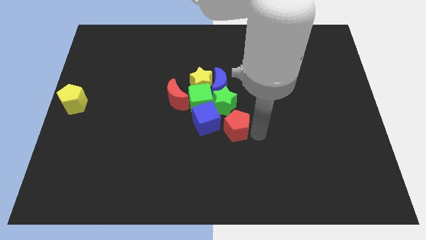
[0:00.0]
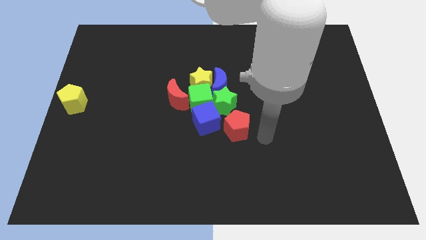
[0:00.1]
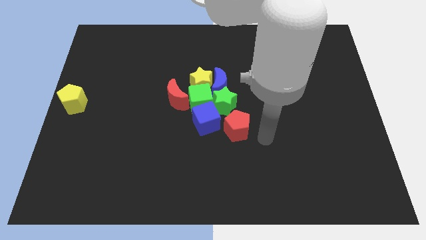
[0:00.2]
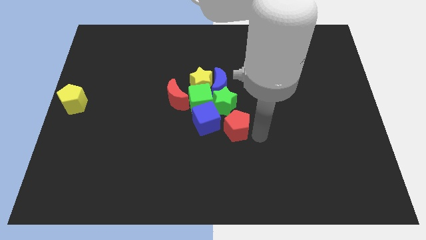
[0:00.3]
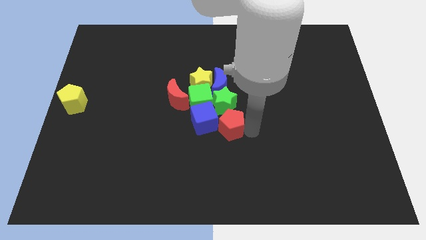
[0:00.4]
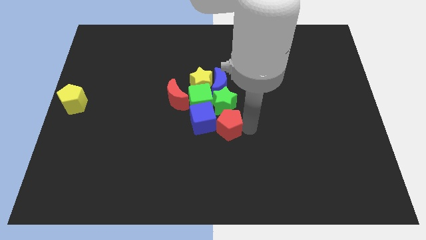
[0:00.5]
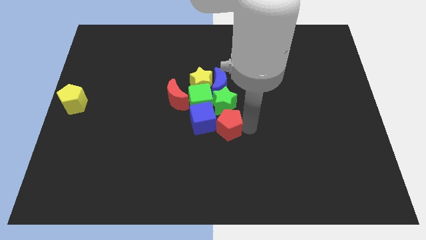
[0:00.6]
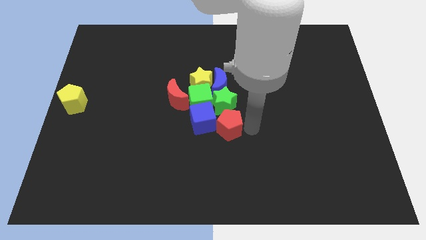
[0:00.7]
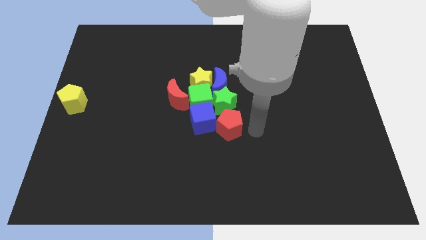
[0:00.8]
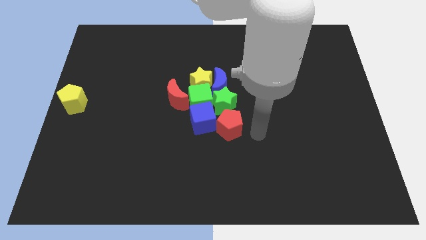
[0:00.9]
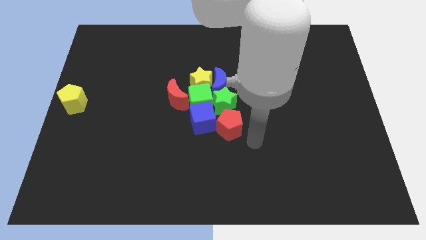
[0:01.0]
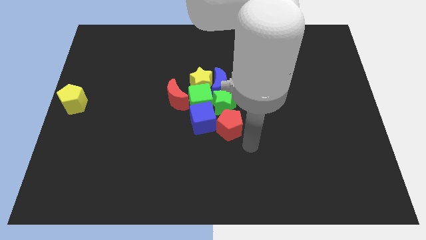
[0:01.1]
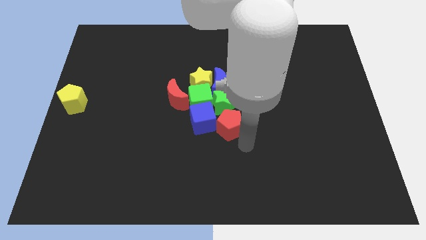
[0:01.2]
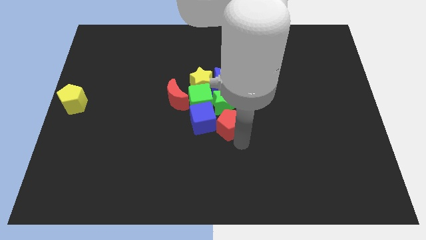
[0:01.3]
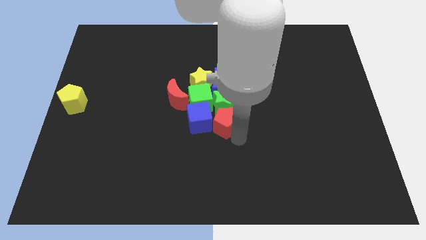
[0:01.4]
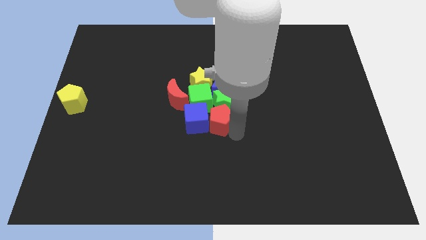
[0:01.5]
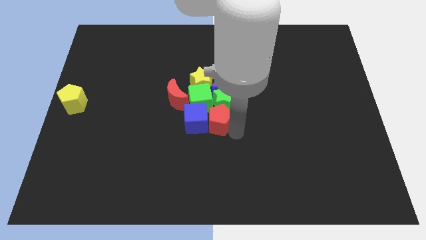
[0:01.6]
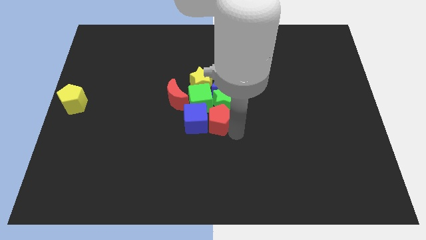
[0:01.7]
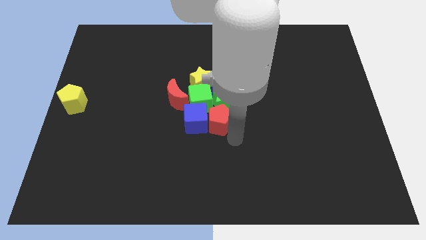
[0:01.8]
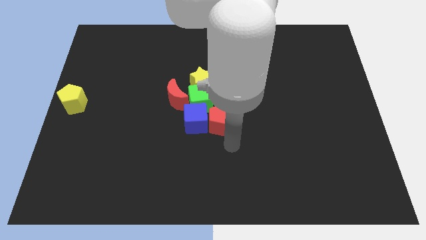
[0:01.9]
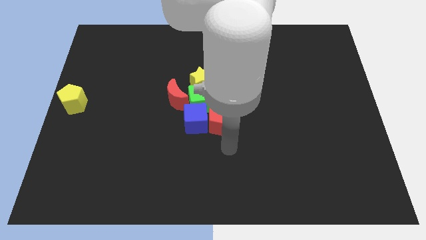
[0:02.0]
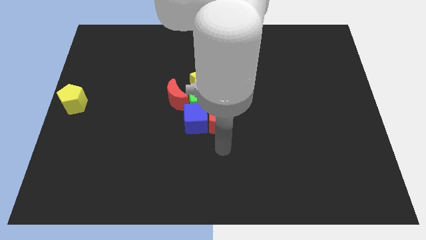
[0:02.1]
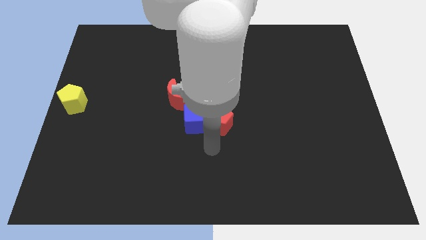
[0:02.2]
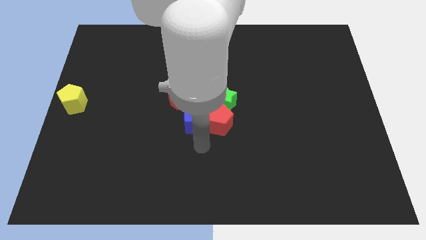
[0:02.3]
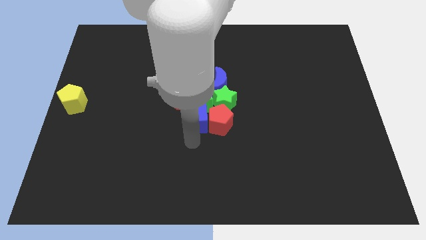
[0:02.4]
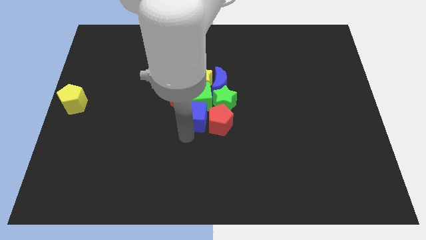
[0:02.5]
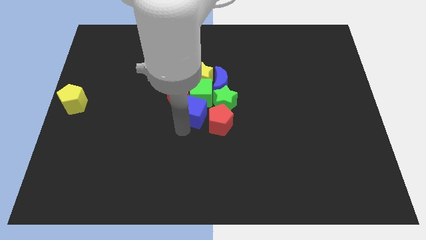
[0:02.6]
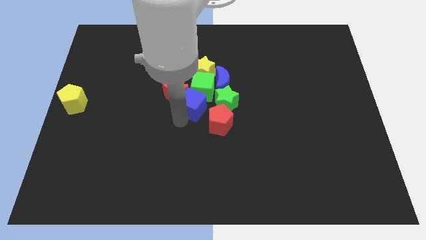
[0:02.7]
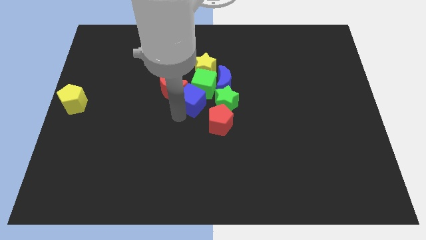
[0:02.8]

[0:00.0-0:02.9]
slightly move the blue cube upwards

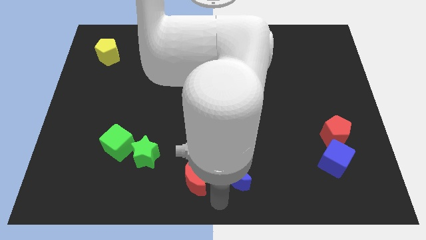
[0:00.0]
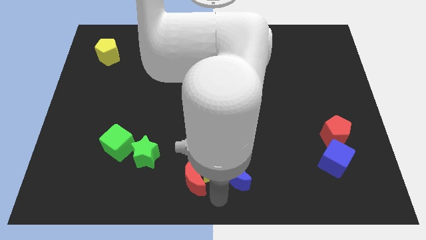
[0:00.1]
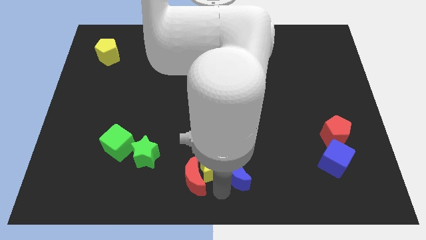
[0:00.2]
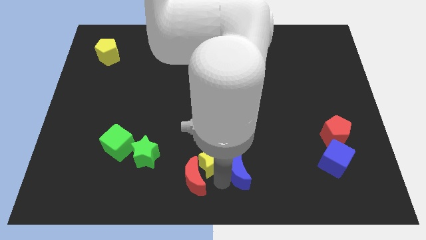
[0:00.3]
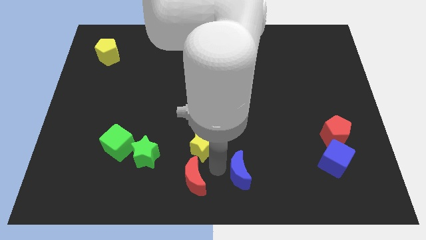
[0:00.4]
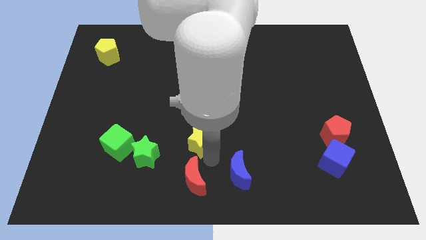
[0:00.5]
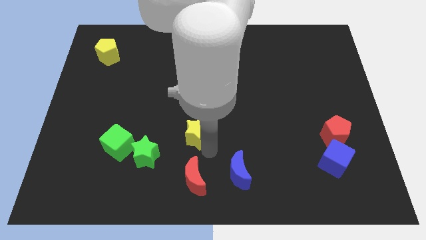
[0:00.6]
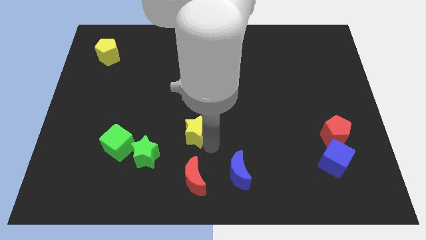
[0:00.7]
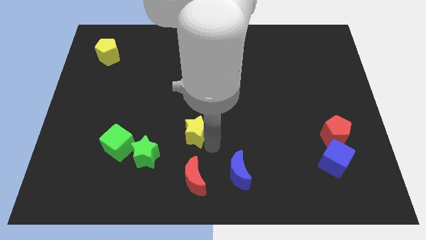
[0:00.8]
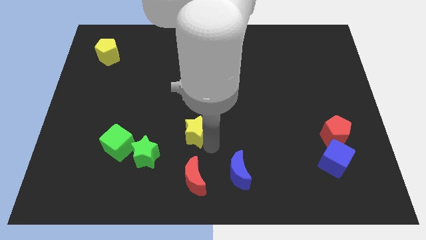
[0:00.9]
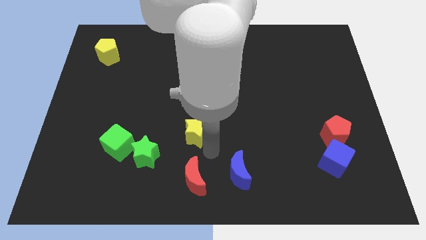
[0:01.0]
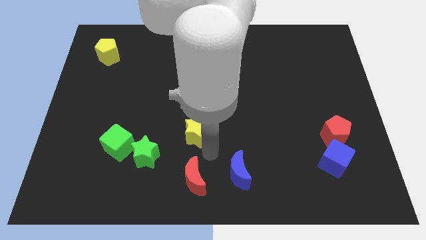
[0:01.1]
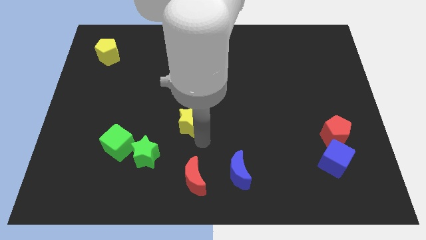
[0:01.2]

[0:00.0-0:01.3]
place the yellow star to the top of the red crescent

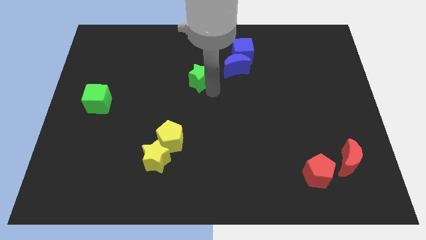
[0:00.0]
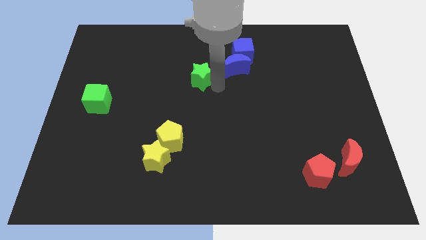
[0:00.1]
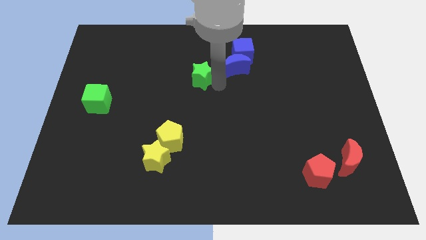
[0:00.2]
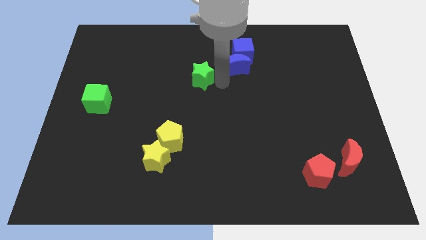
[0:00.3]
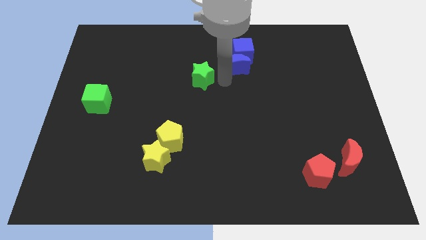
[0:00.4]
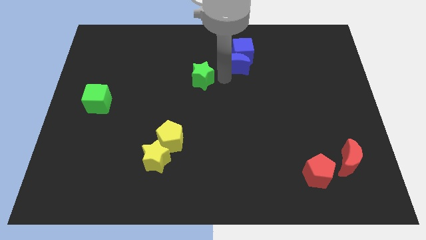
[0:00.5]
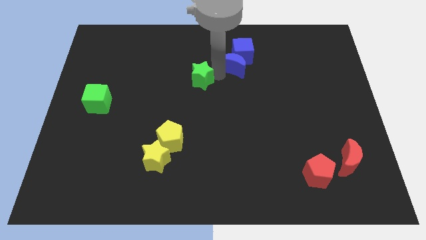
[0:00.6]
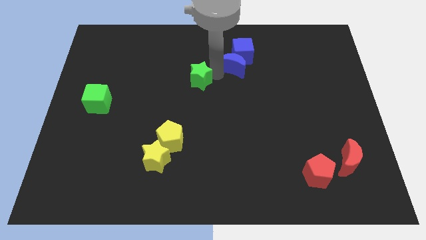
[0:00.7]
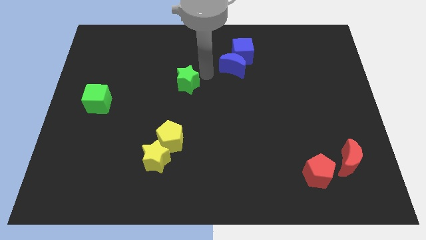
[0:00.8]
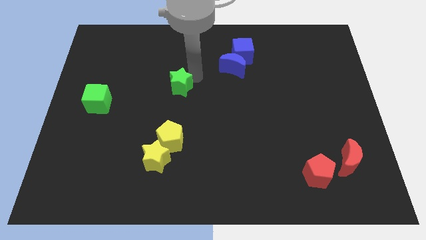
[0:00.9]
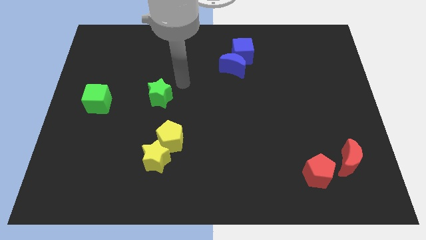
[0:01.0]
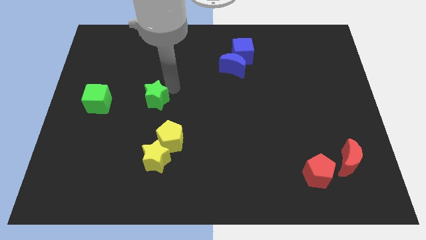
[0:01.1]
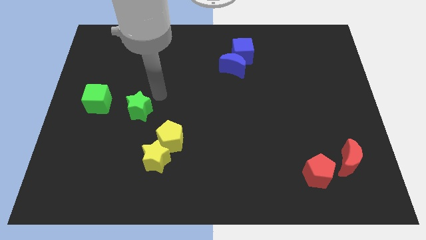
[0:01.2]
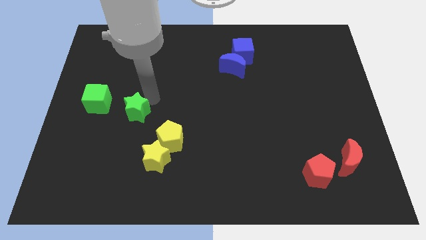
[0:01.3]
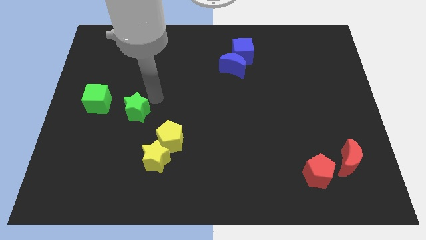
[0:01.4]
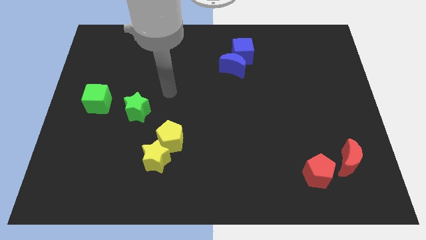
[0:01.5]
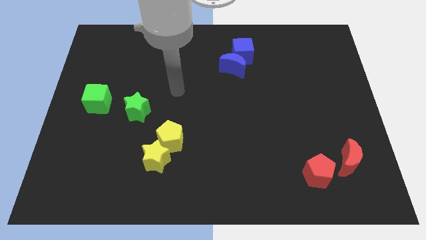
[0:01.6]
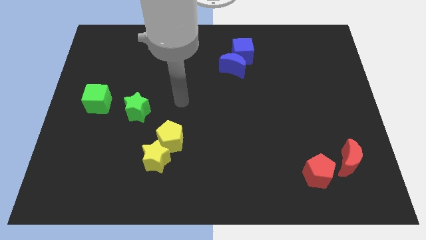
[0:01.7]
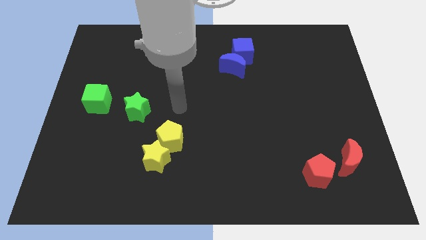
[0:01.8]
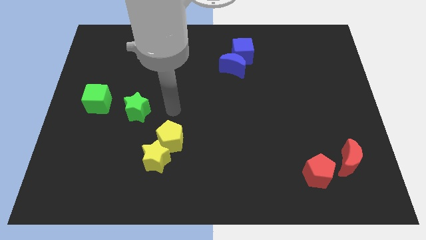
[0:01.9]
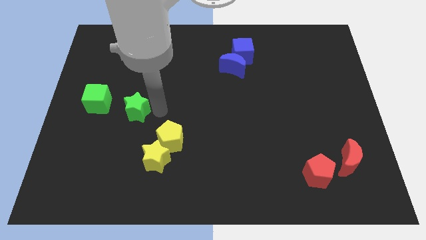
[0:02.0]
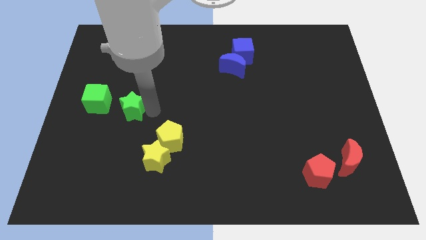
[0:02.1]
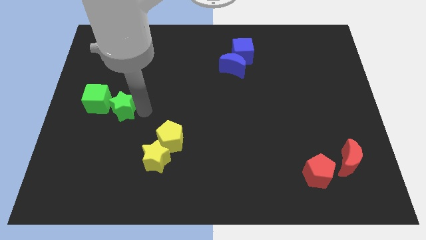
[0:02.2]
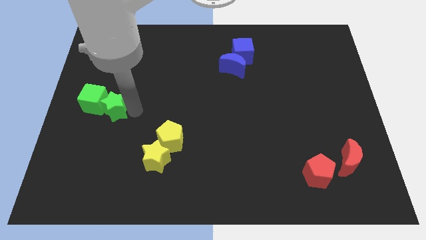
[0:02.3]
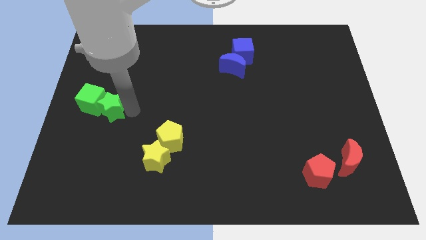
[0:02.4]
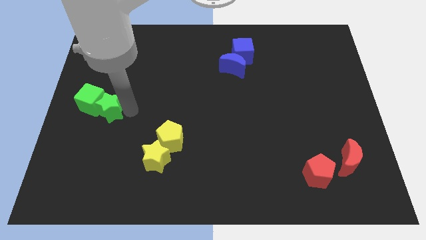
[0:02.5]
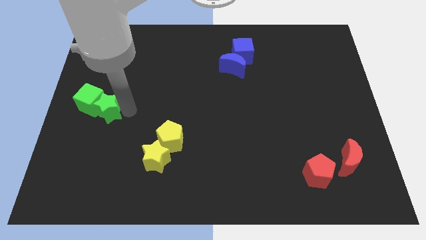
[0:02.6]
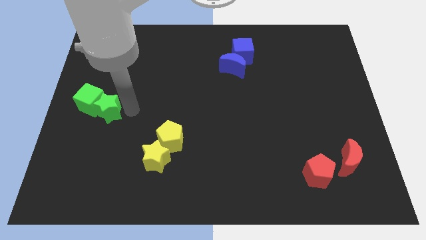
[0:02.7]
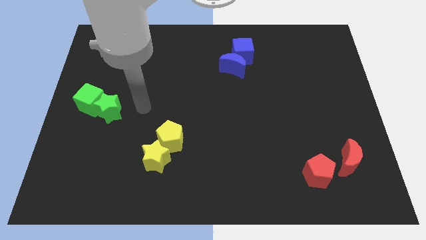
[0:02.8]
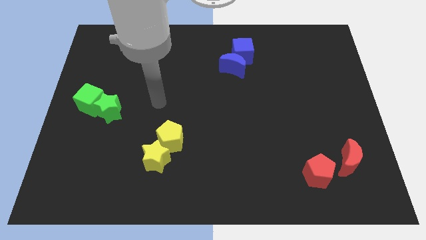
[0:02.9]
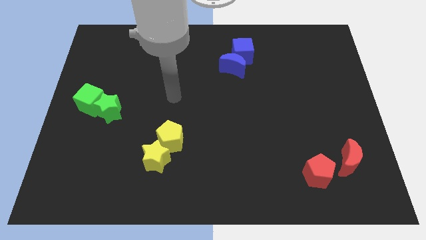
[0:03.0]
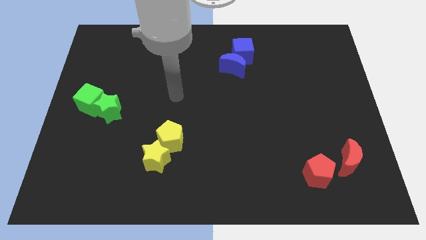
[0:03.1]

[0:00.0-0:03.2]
move the green star into the green cube

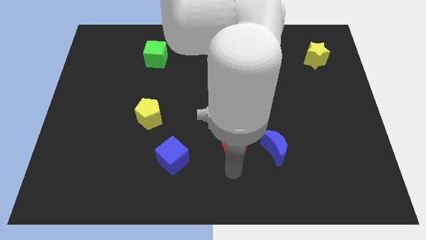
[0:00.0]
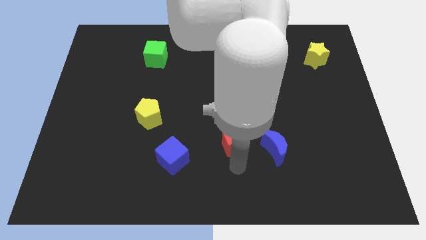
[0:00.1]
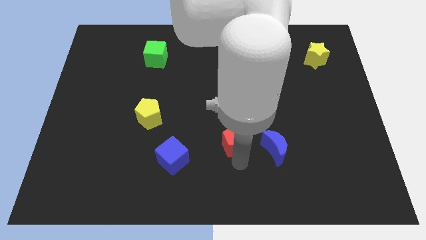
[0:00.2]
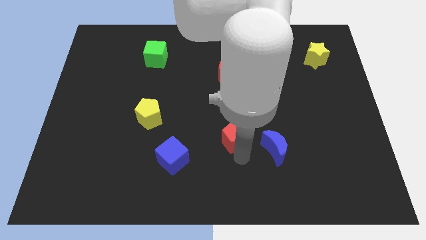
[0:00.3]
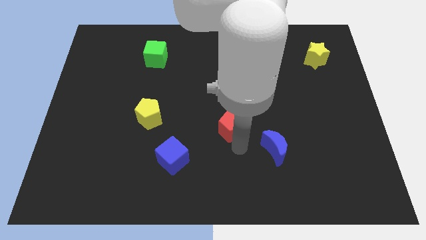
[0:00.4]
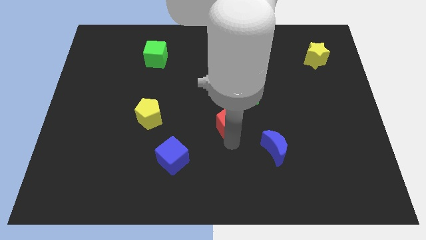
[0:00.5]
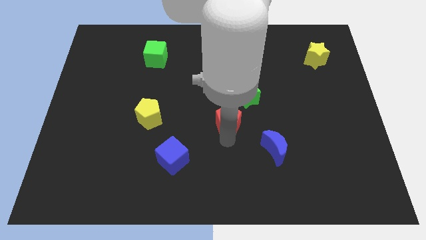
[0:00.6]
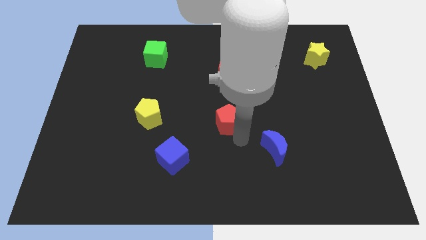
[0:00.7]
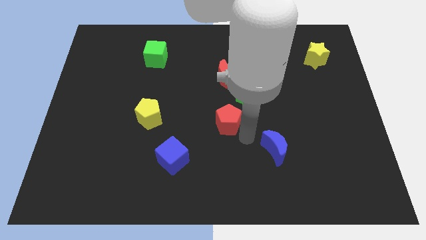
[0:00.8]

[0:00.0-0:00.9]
push red pentagon towards green star

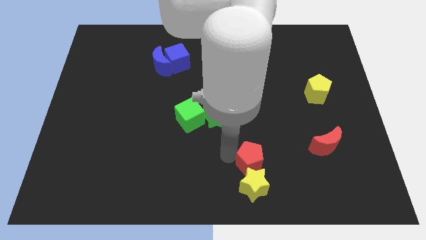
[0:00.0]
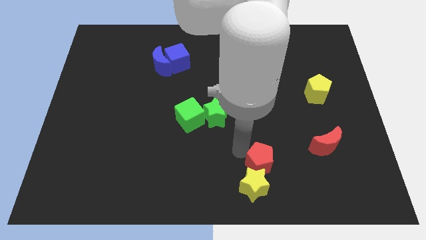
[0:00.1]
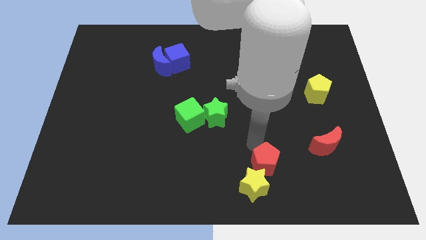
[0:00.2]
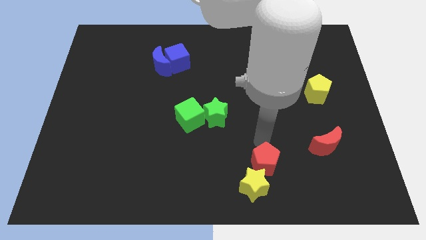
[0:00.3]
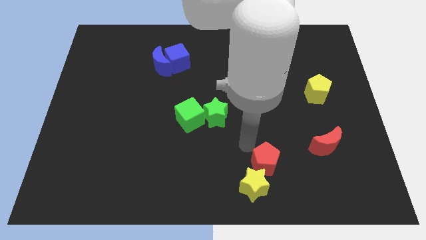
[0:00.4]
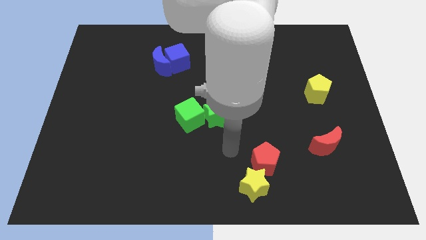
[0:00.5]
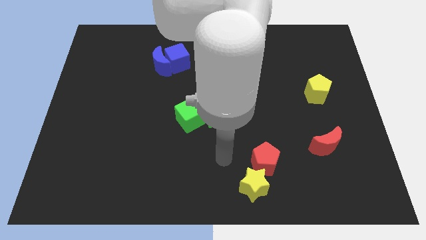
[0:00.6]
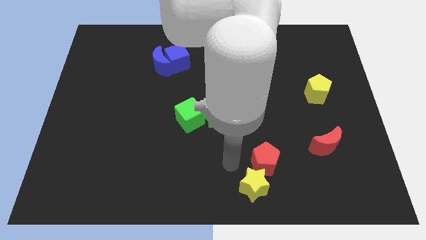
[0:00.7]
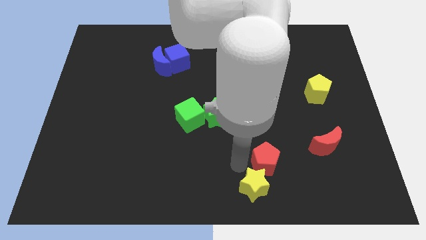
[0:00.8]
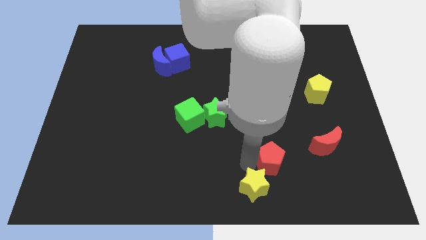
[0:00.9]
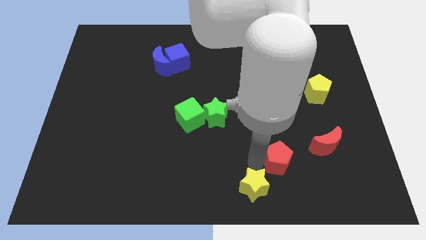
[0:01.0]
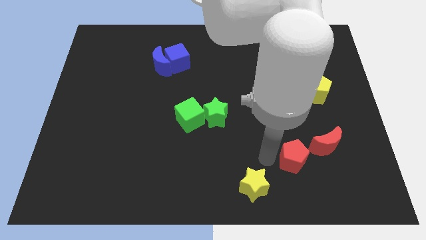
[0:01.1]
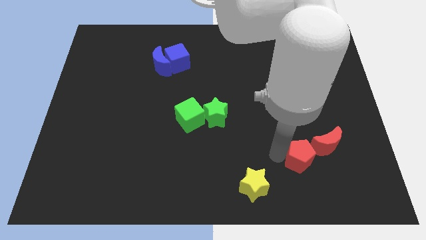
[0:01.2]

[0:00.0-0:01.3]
move the red pentagon towards the red crescent
